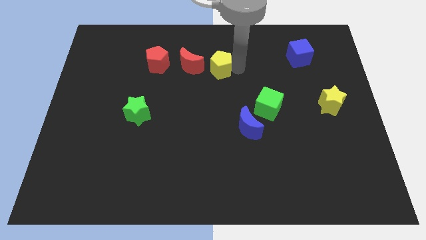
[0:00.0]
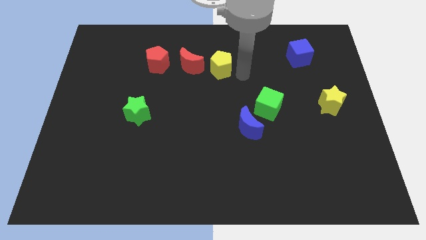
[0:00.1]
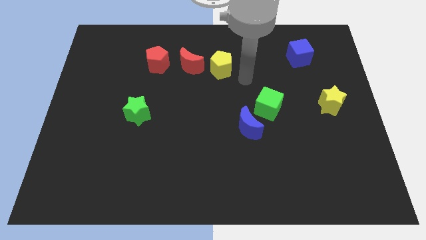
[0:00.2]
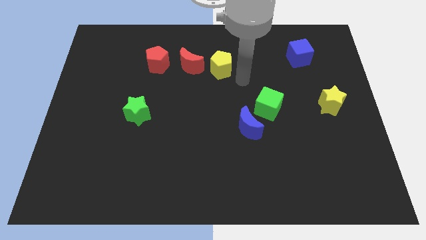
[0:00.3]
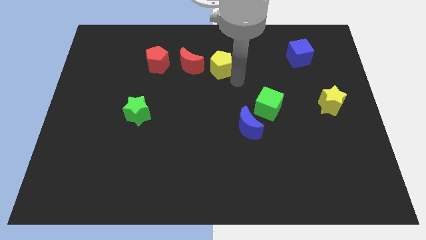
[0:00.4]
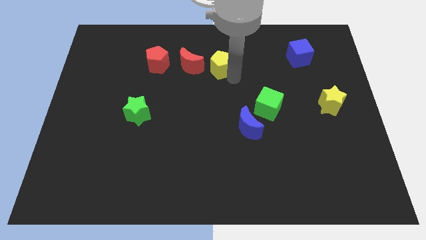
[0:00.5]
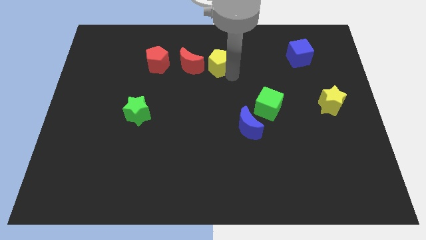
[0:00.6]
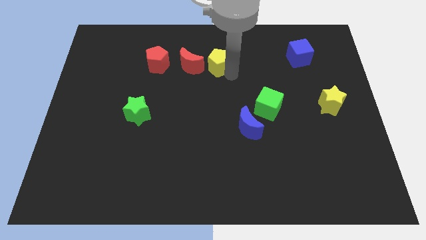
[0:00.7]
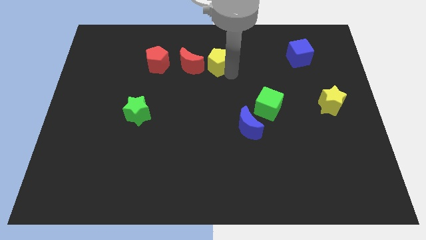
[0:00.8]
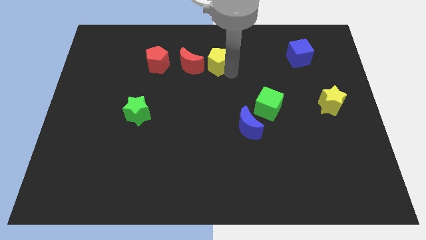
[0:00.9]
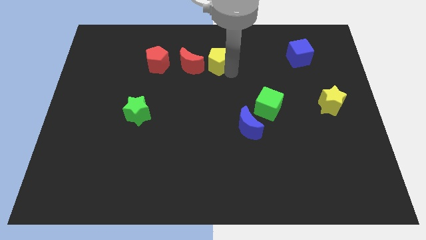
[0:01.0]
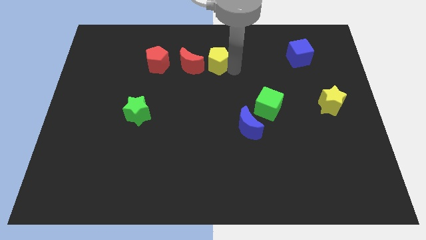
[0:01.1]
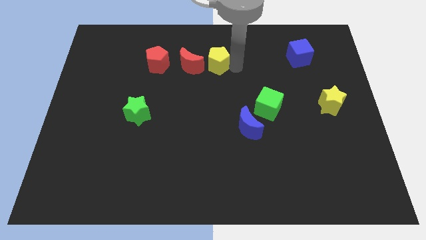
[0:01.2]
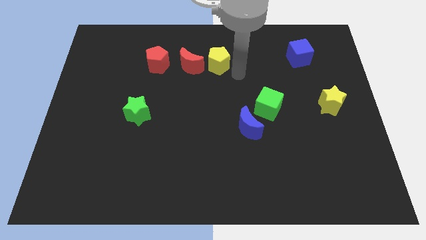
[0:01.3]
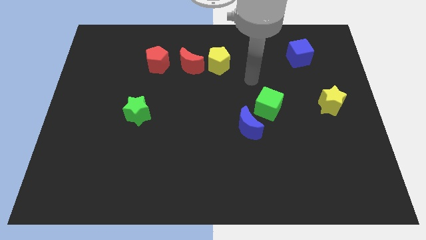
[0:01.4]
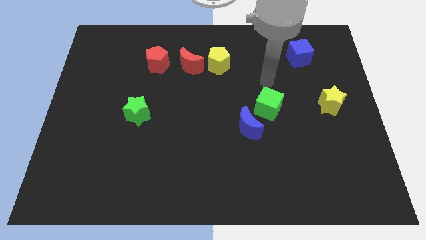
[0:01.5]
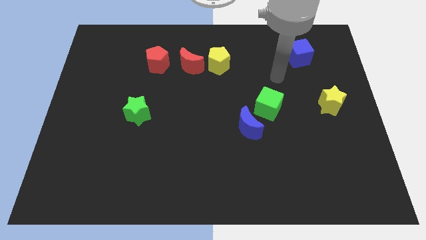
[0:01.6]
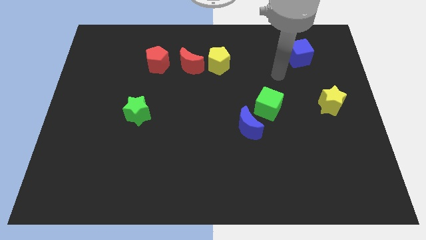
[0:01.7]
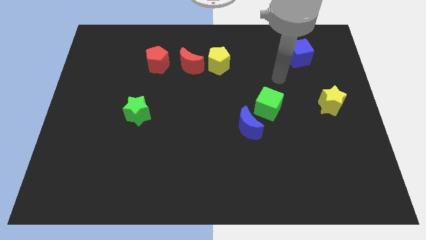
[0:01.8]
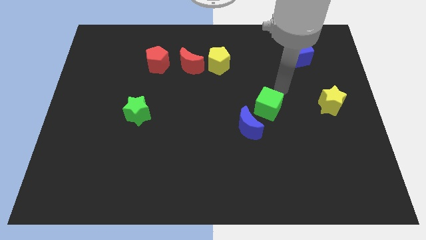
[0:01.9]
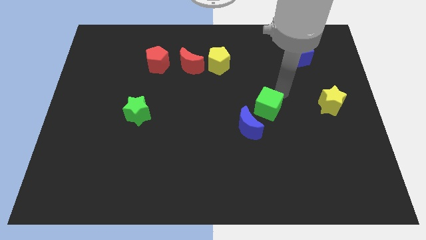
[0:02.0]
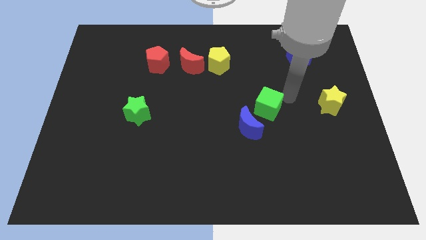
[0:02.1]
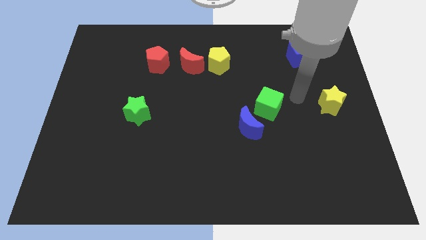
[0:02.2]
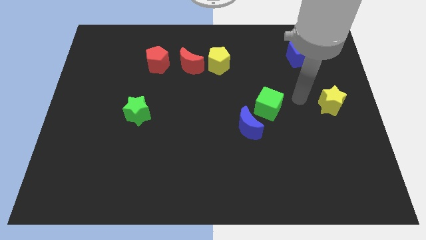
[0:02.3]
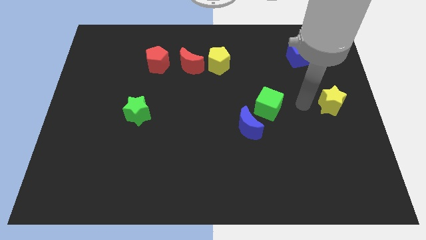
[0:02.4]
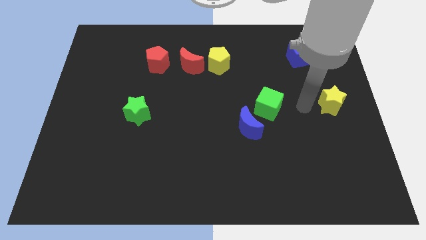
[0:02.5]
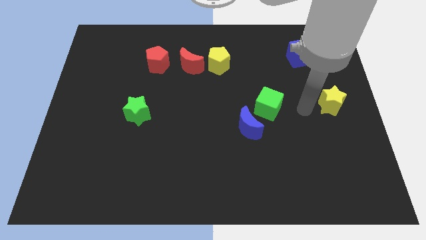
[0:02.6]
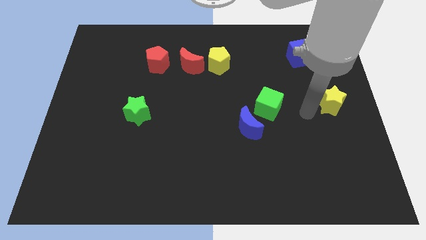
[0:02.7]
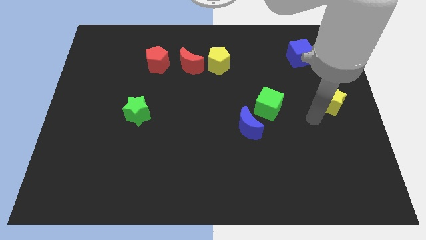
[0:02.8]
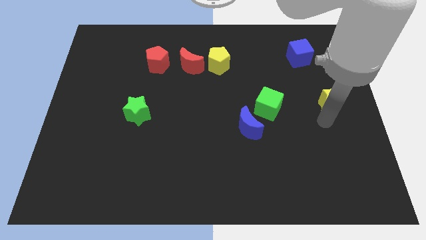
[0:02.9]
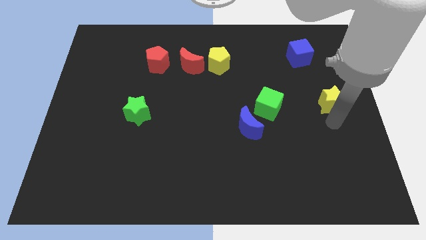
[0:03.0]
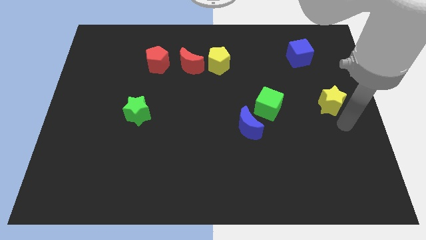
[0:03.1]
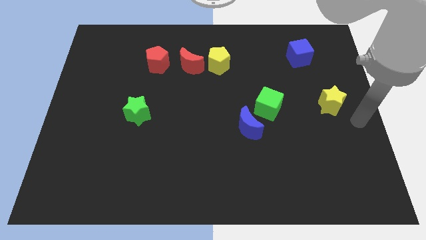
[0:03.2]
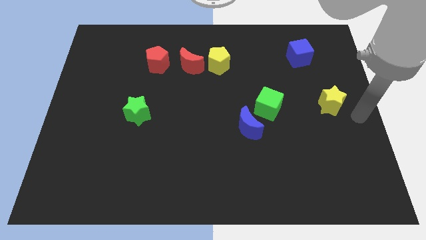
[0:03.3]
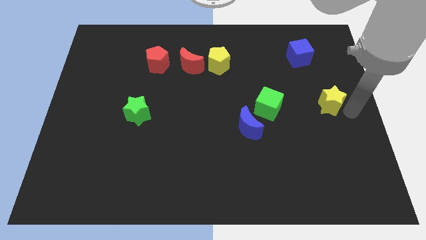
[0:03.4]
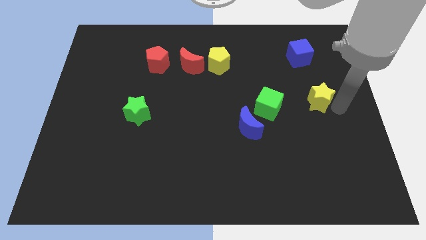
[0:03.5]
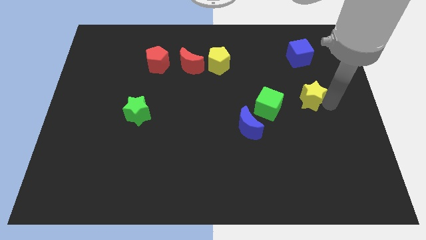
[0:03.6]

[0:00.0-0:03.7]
move your arm to the yellow star

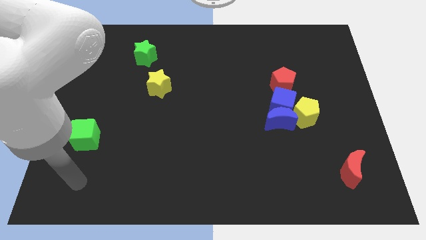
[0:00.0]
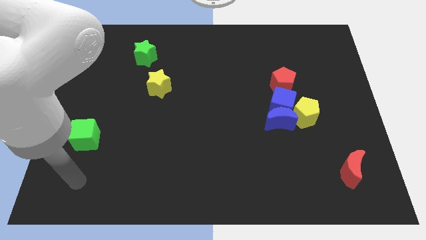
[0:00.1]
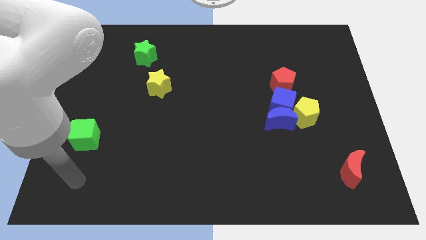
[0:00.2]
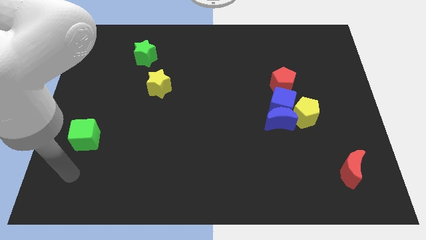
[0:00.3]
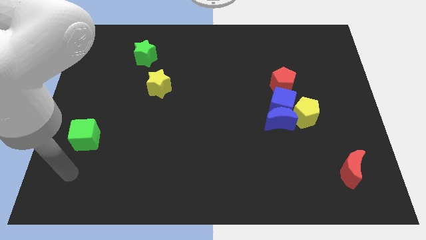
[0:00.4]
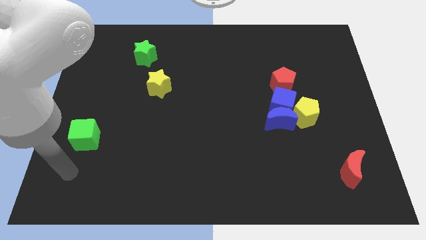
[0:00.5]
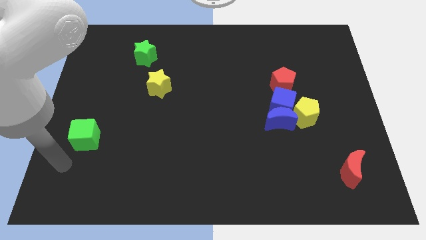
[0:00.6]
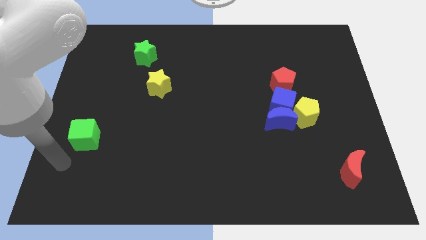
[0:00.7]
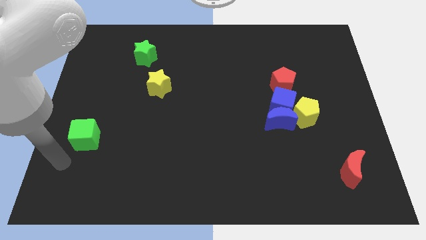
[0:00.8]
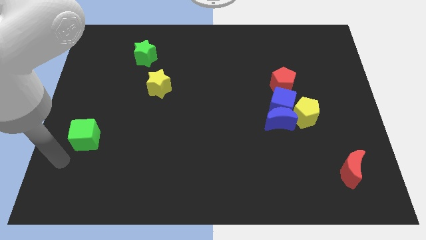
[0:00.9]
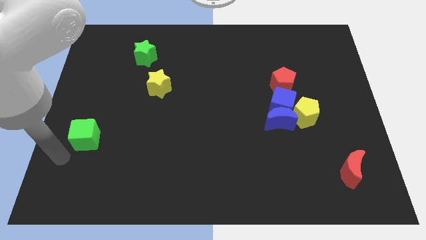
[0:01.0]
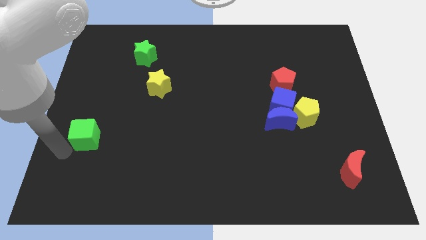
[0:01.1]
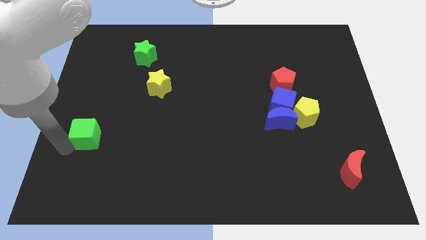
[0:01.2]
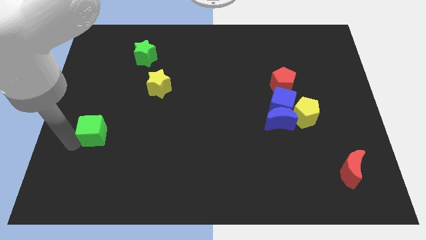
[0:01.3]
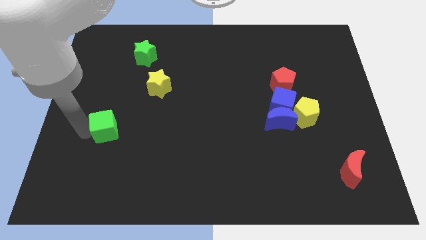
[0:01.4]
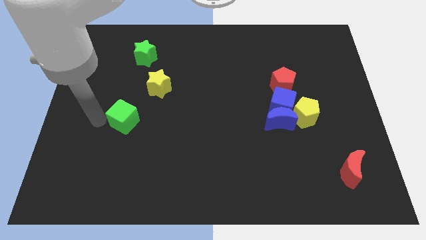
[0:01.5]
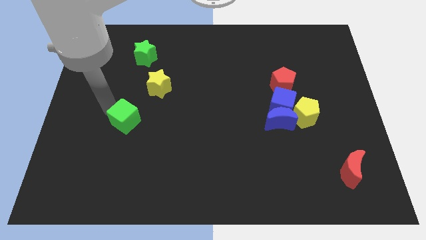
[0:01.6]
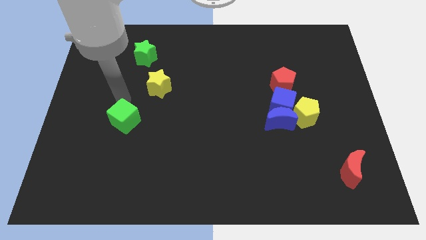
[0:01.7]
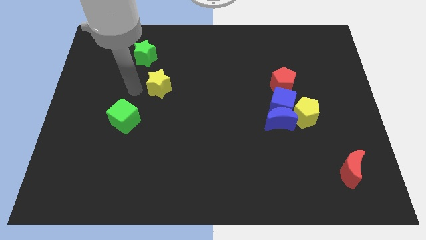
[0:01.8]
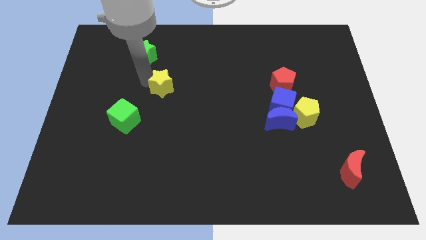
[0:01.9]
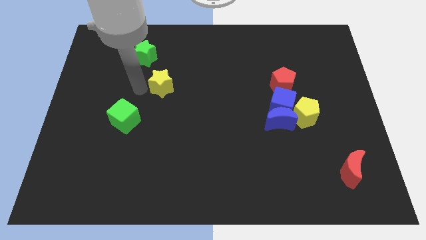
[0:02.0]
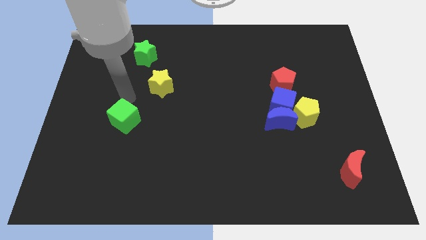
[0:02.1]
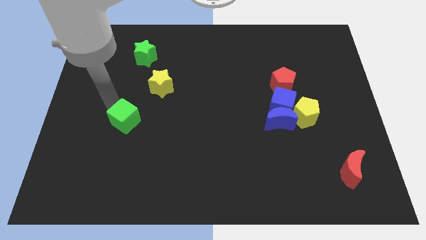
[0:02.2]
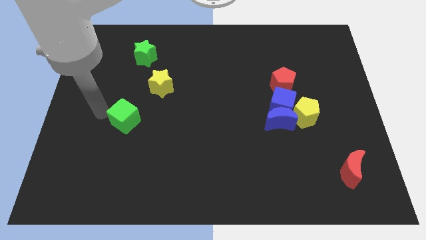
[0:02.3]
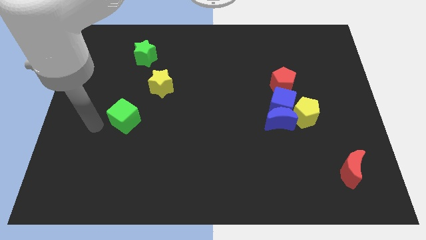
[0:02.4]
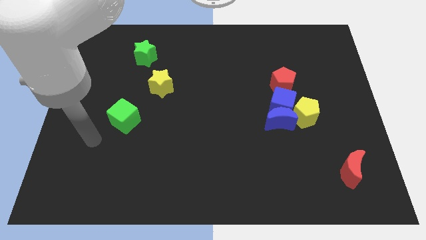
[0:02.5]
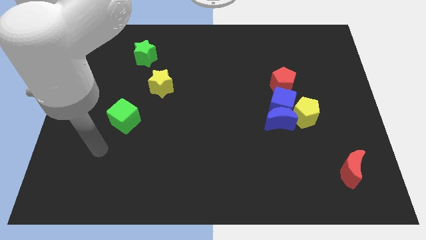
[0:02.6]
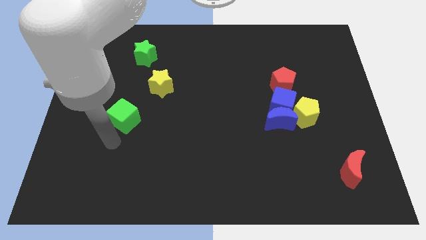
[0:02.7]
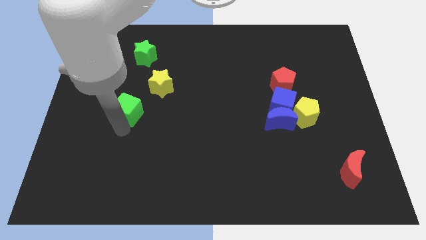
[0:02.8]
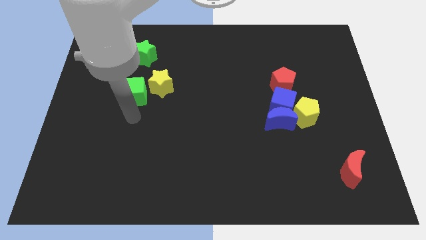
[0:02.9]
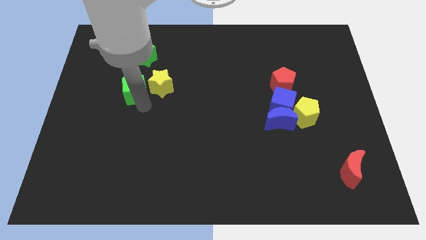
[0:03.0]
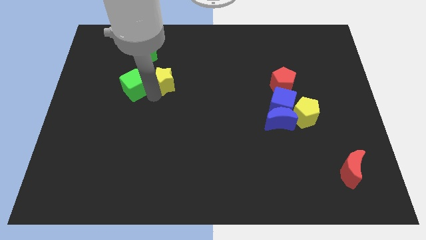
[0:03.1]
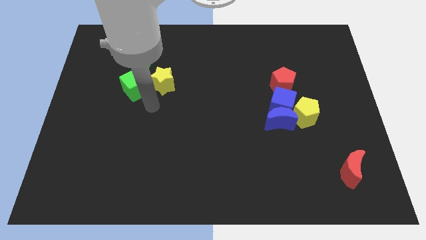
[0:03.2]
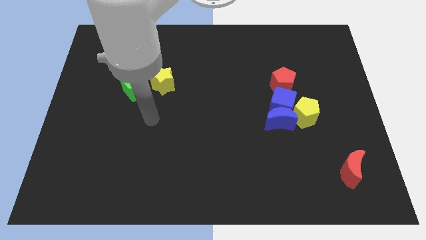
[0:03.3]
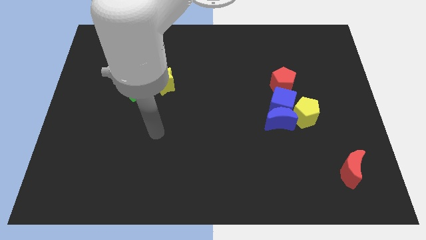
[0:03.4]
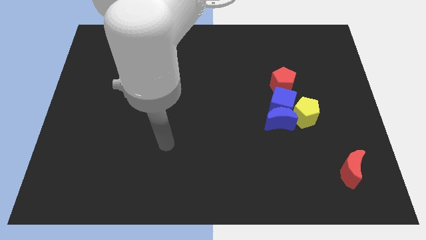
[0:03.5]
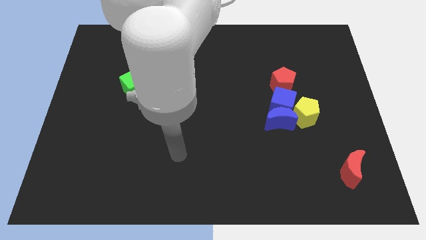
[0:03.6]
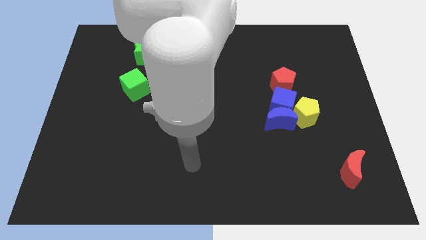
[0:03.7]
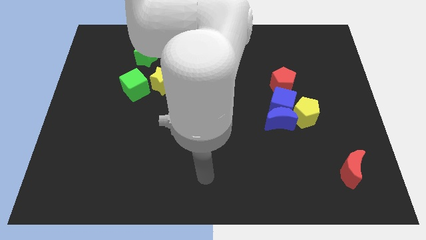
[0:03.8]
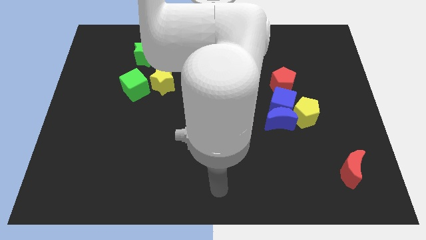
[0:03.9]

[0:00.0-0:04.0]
push green cube near yellow star

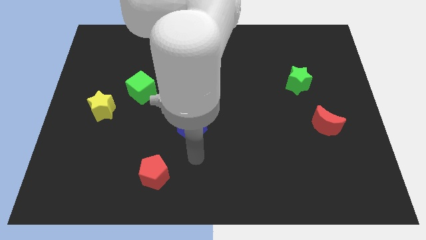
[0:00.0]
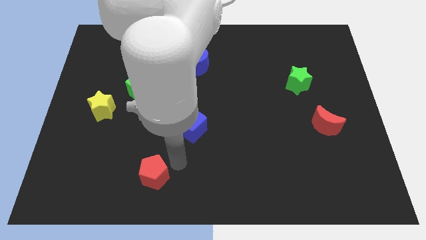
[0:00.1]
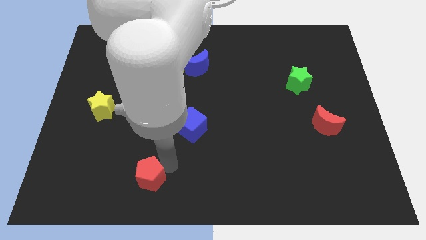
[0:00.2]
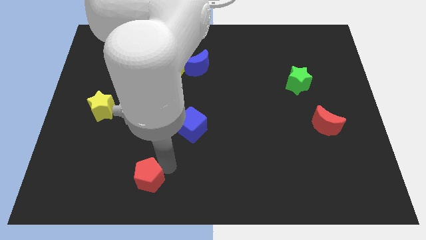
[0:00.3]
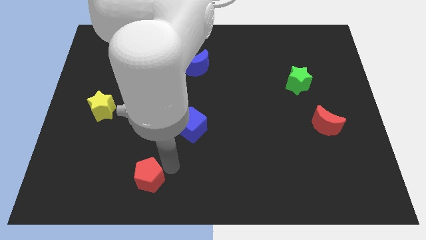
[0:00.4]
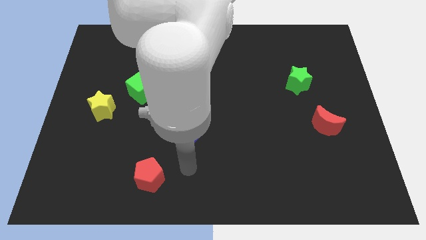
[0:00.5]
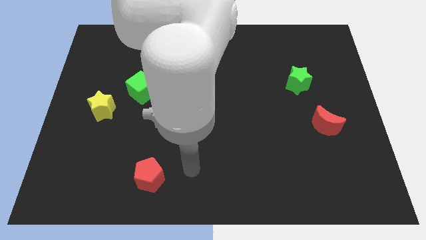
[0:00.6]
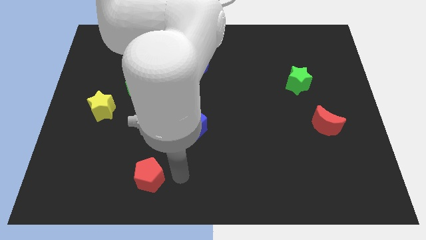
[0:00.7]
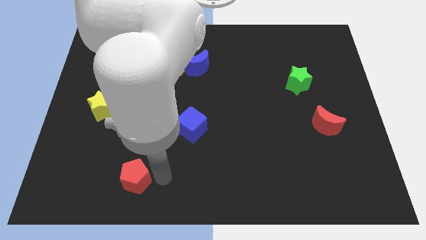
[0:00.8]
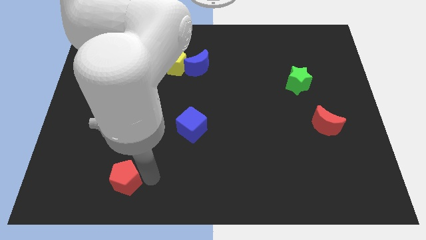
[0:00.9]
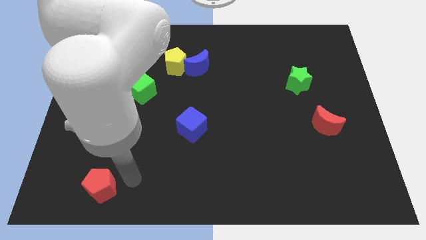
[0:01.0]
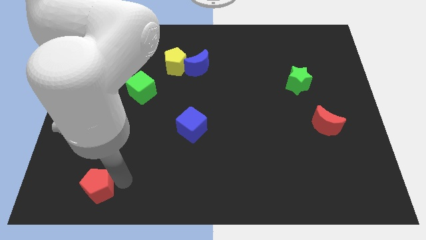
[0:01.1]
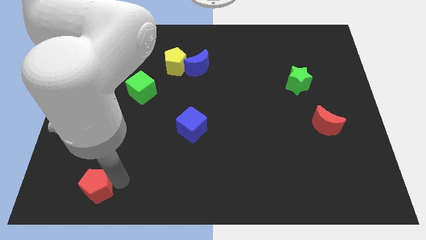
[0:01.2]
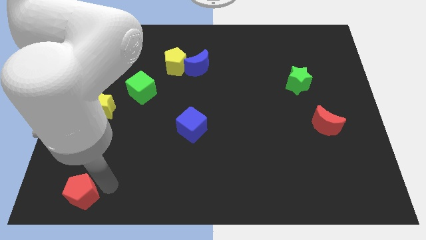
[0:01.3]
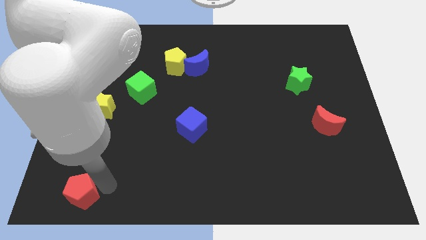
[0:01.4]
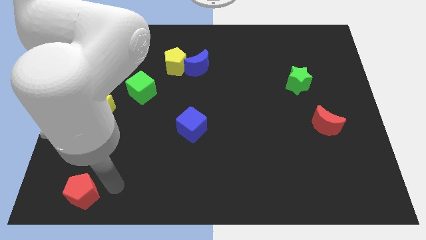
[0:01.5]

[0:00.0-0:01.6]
drag the red pentagon towards the bottom left corner
